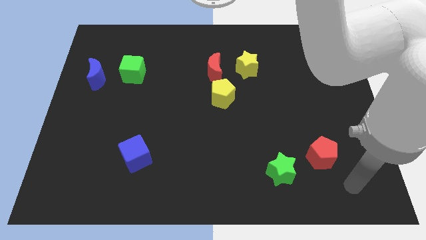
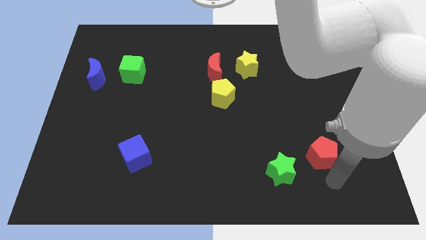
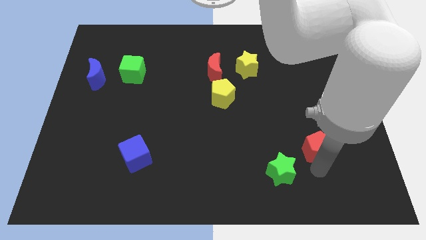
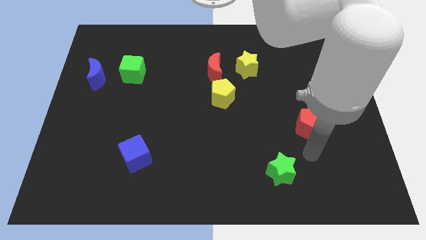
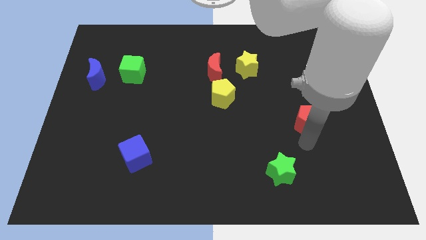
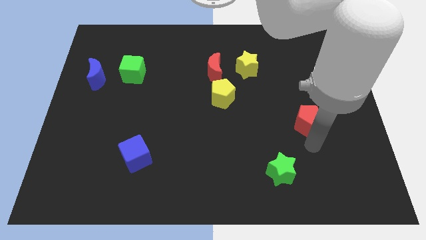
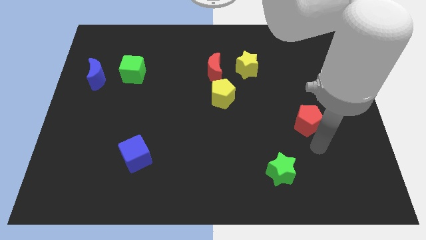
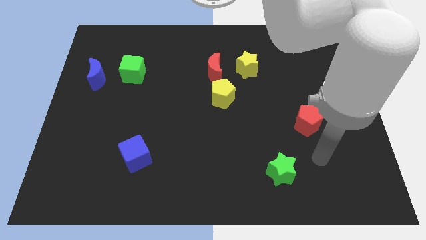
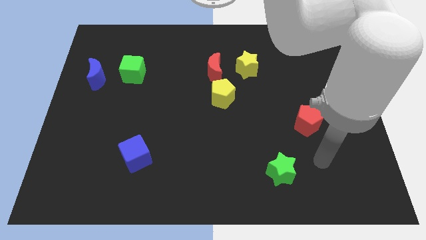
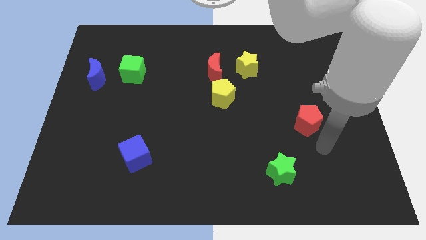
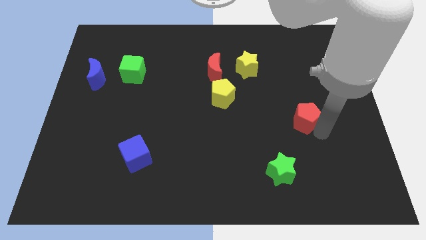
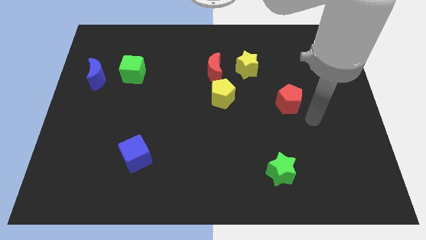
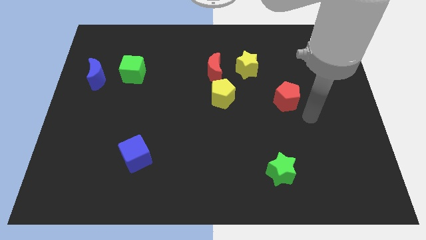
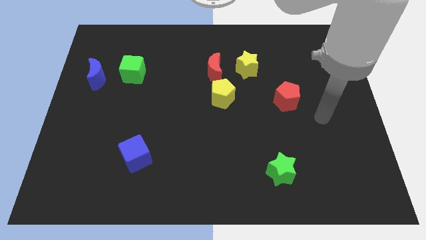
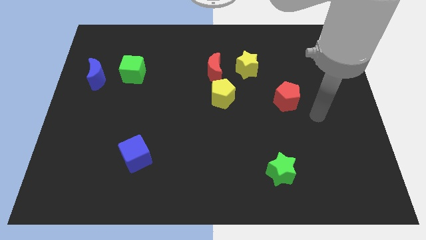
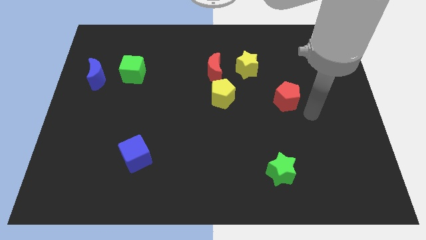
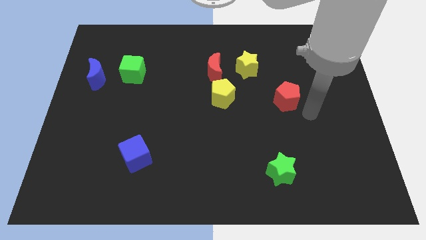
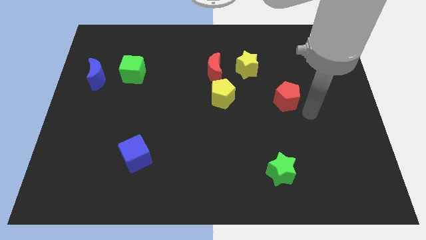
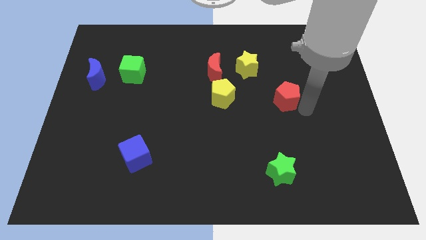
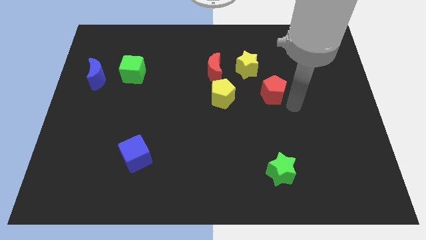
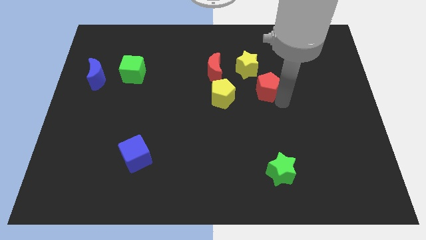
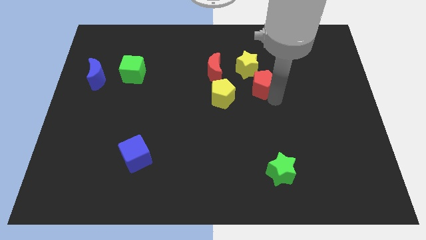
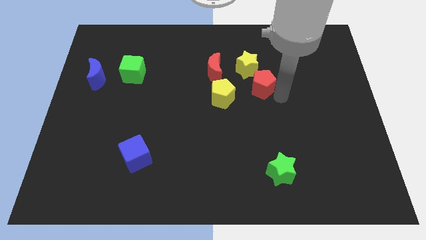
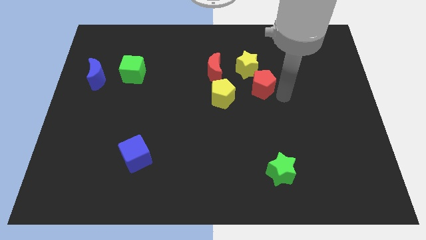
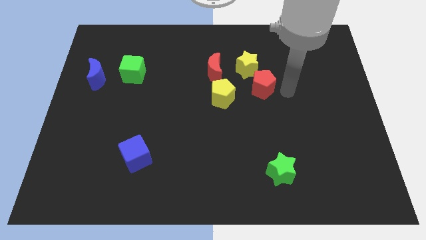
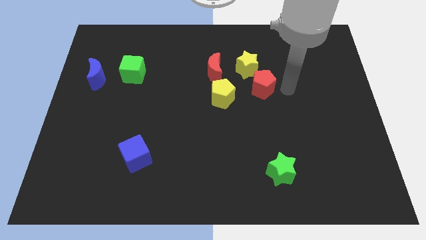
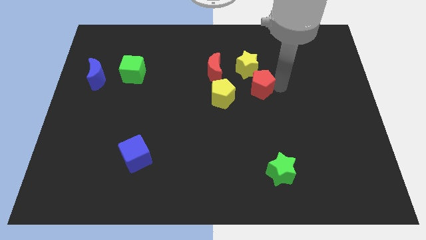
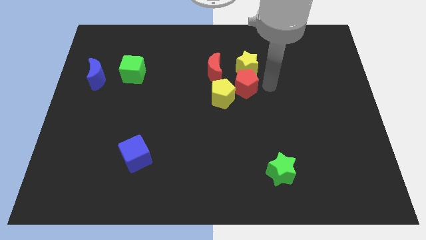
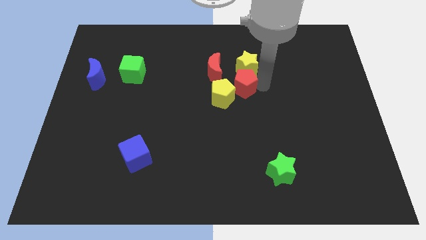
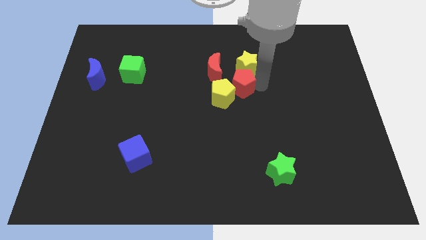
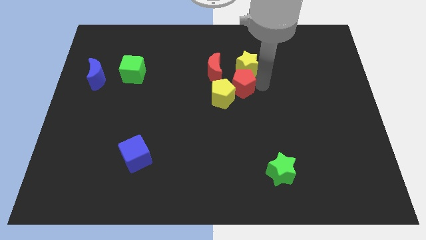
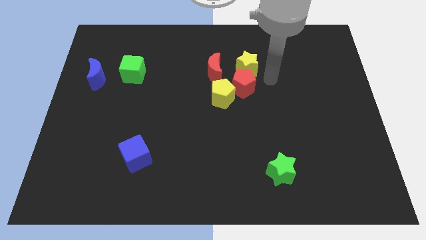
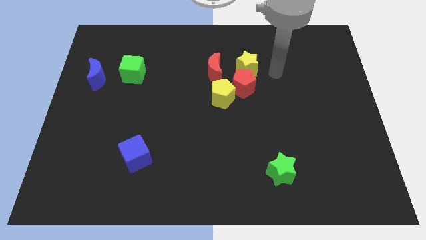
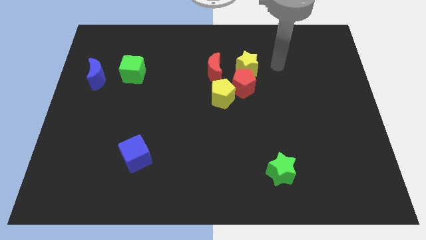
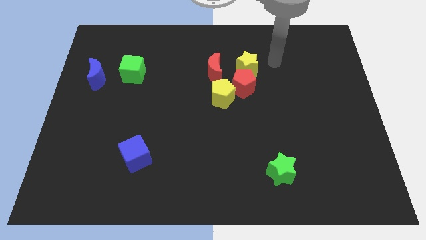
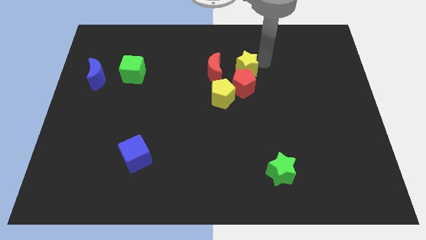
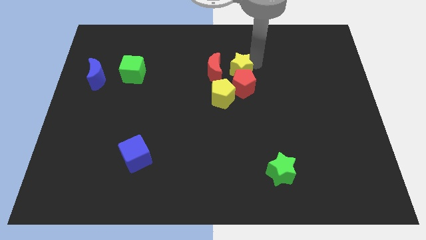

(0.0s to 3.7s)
push the red pentagon in between yellow star and the yellow pentagon

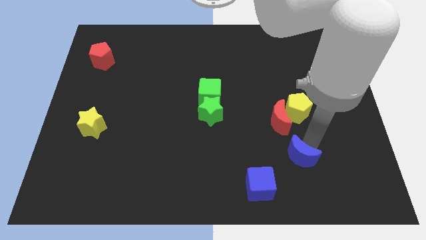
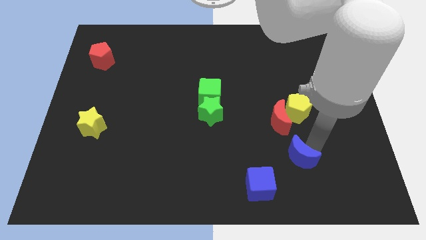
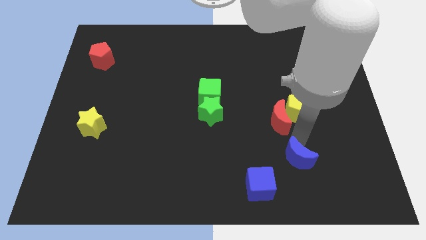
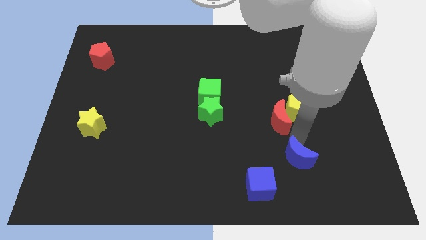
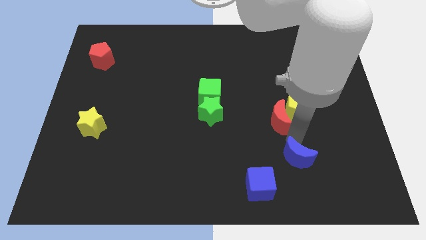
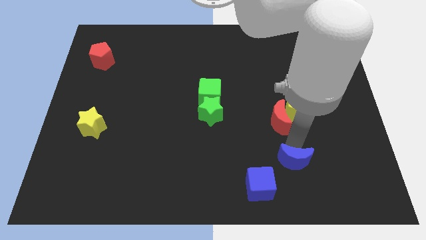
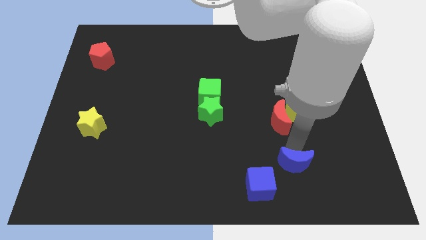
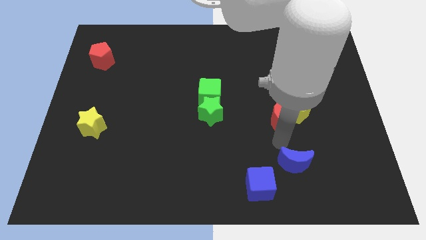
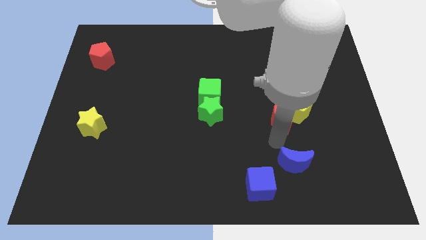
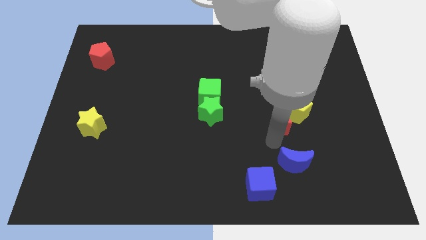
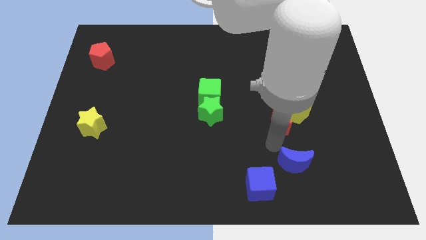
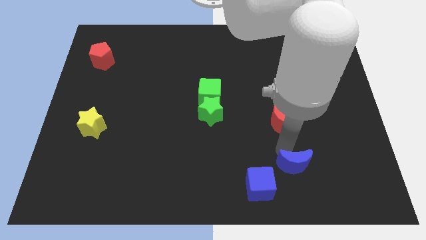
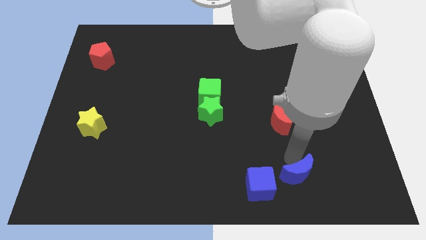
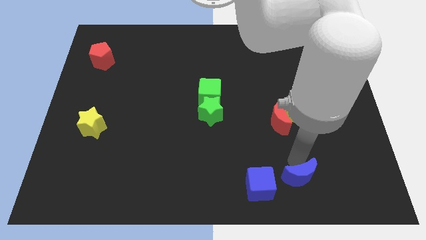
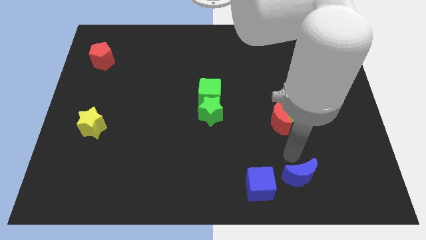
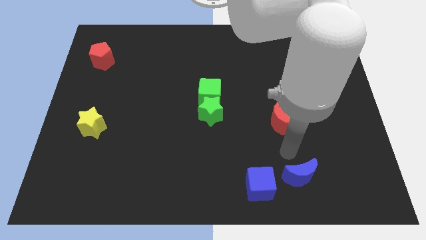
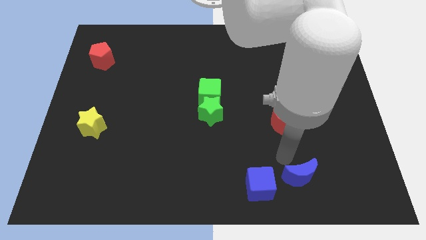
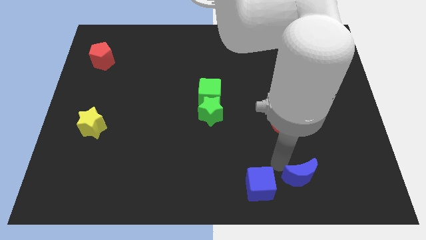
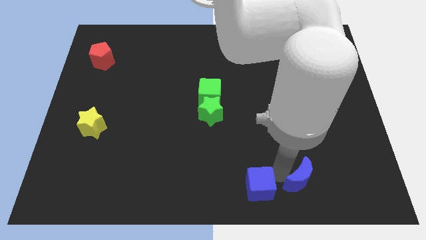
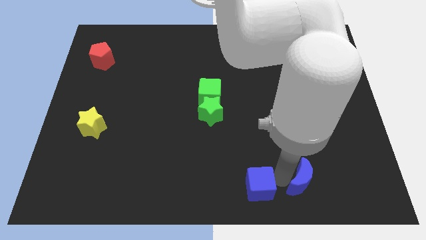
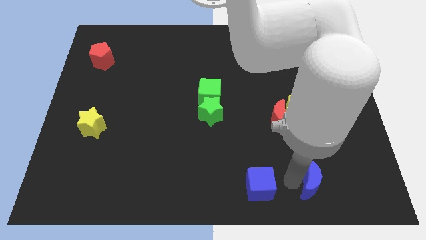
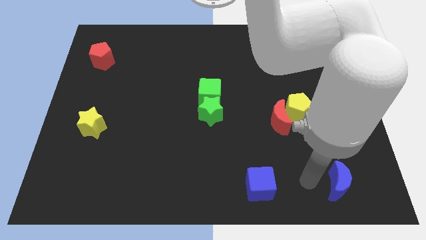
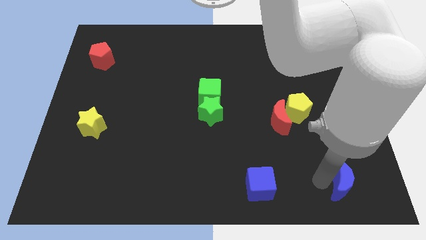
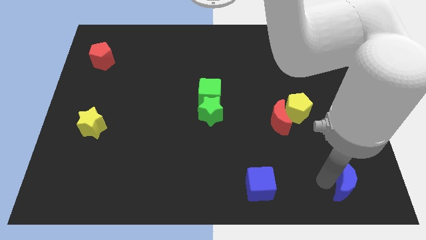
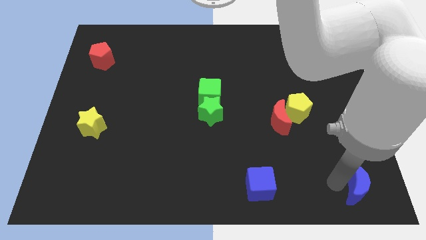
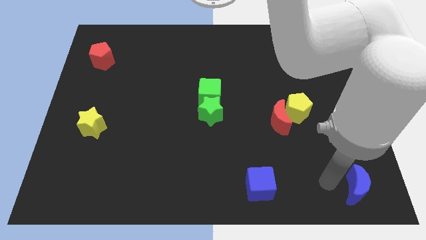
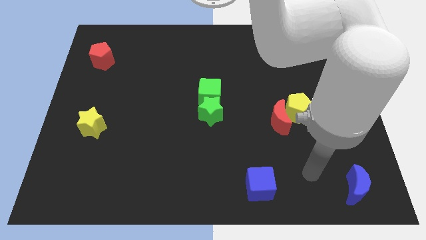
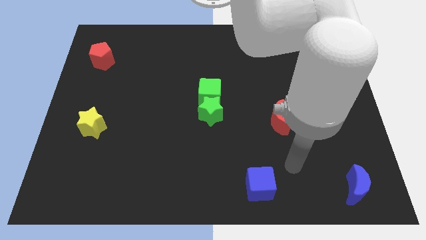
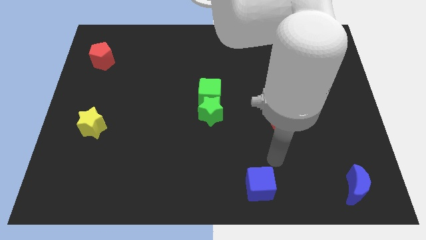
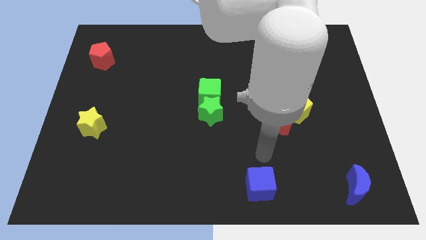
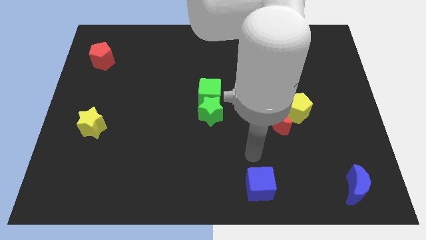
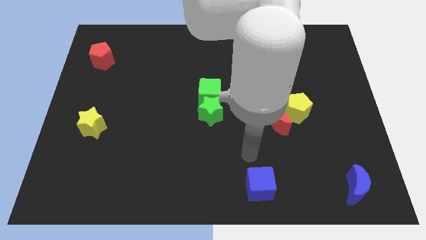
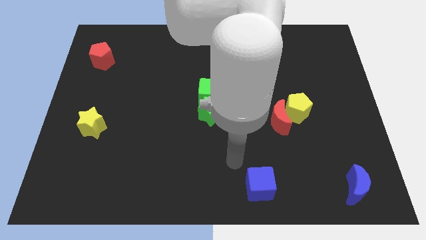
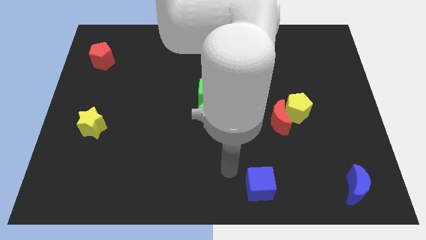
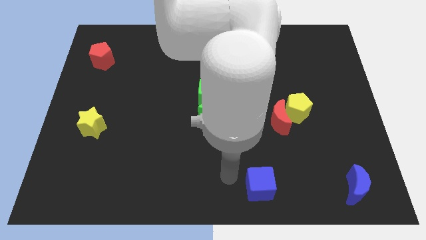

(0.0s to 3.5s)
push the blue crescent towards the right corner of the board

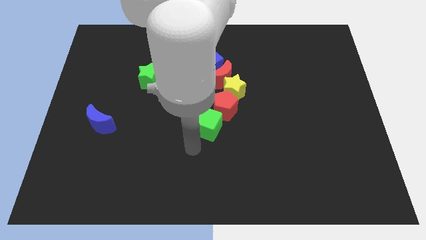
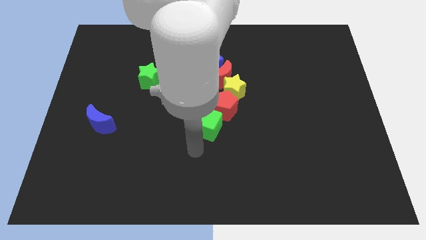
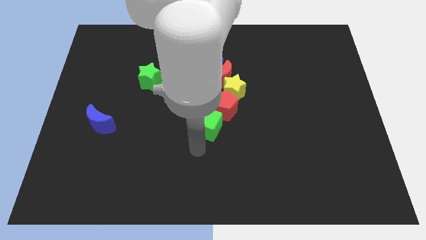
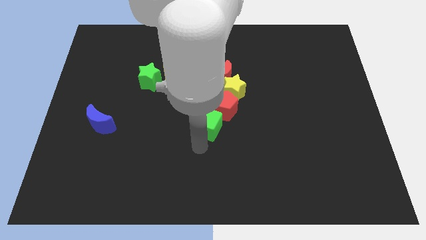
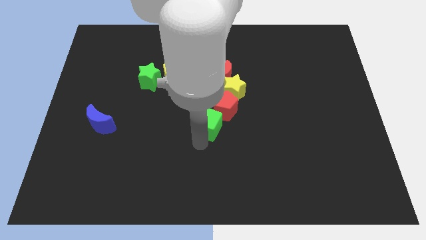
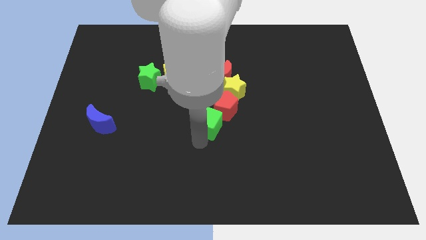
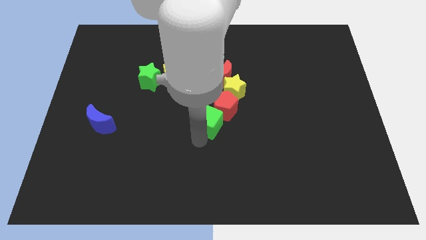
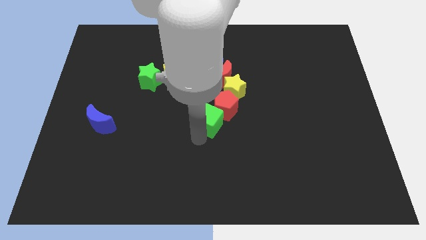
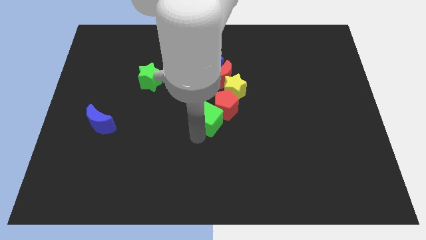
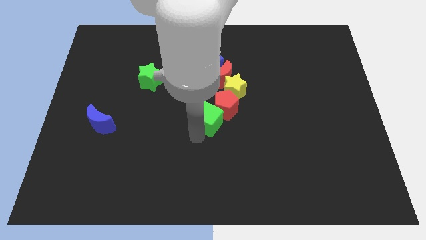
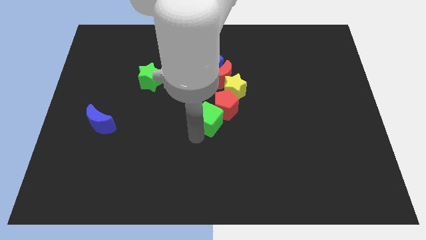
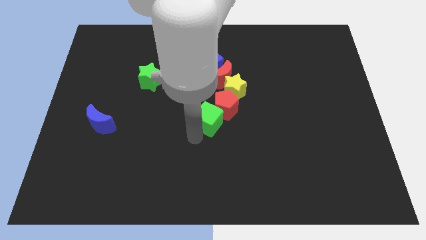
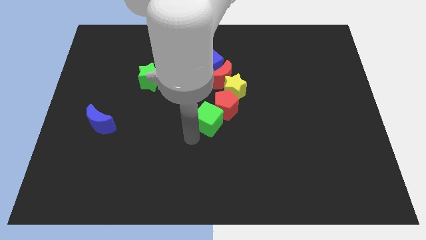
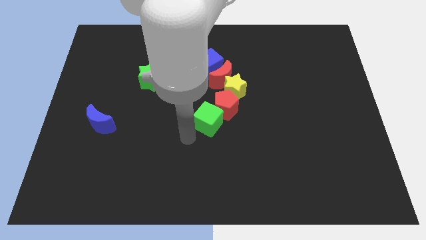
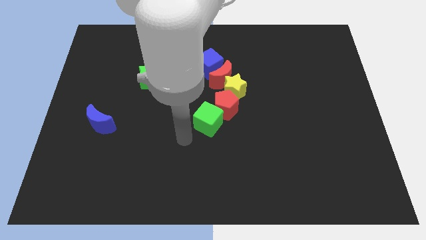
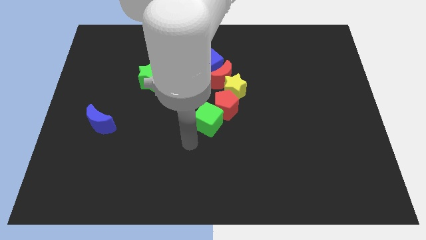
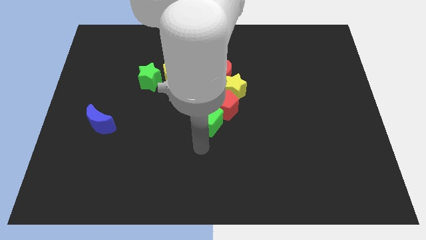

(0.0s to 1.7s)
move the green cube to the bottom of the red pentagon

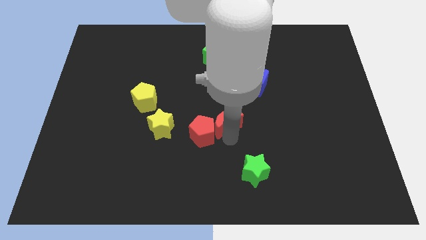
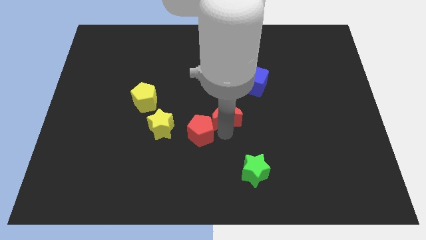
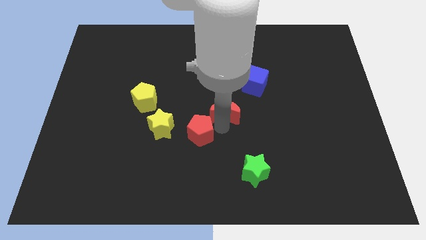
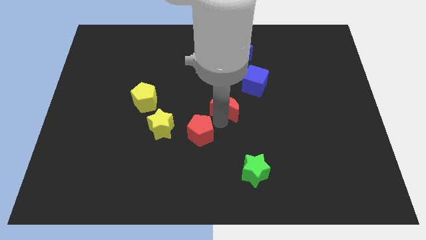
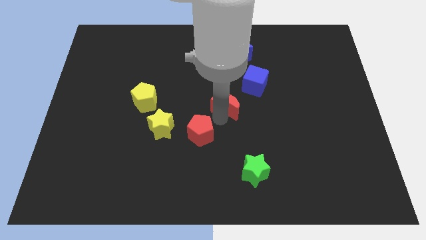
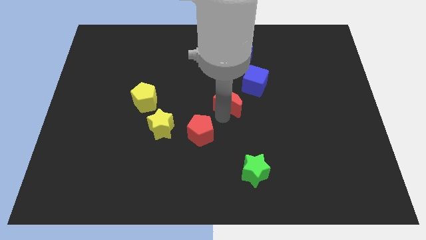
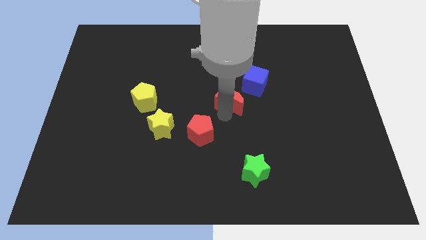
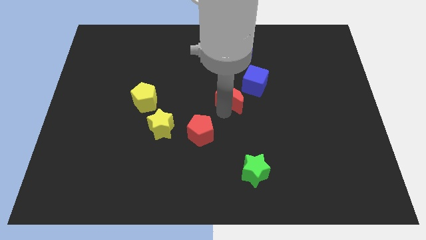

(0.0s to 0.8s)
place the red moon diagonally in between the red pentagon and blue cube
